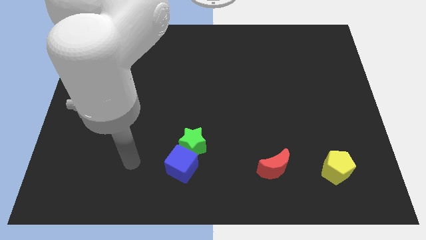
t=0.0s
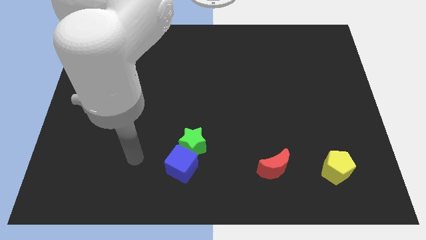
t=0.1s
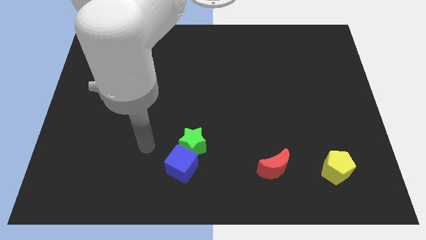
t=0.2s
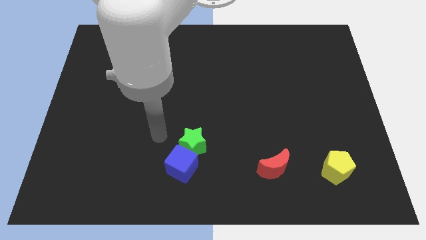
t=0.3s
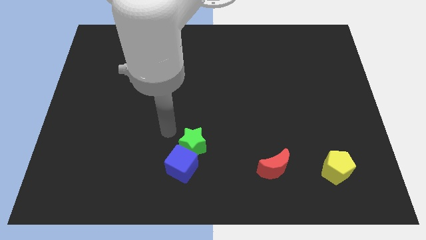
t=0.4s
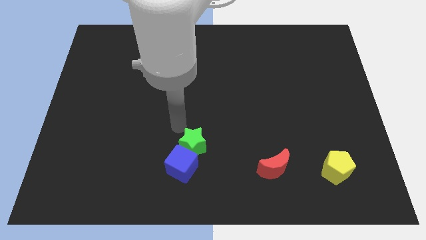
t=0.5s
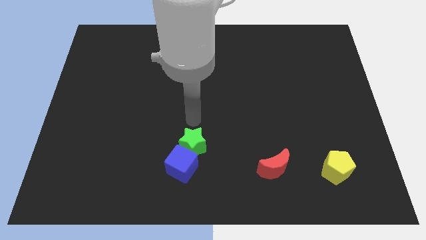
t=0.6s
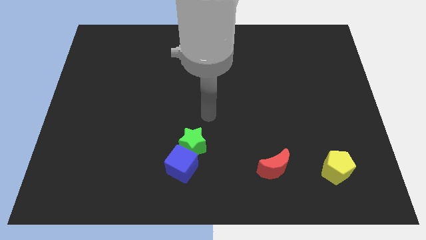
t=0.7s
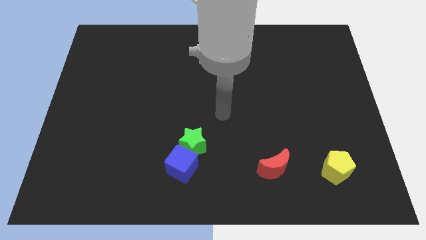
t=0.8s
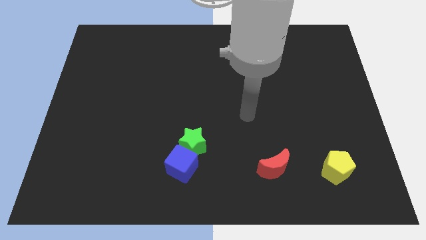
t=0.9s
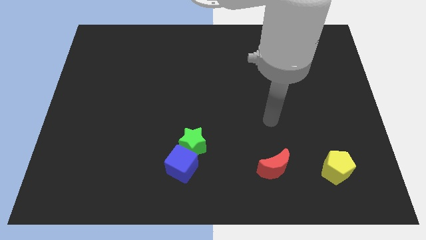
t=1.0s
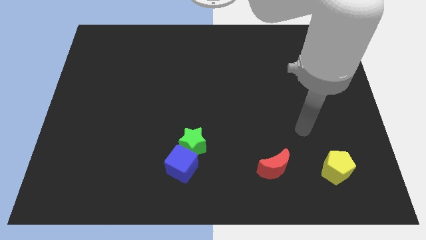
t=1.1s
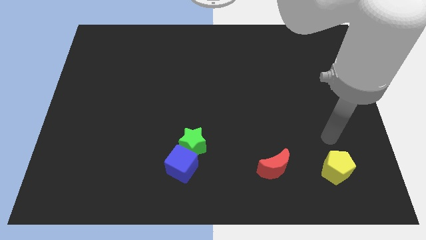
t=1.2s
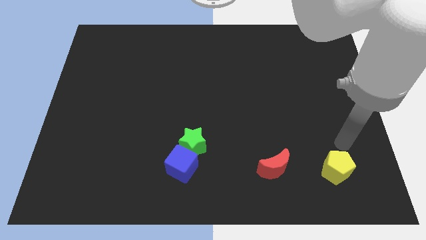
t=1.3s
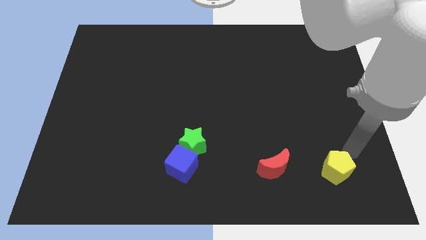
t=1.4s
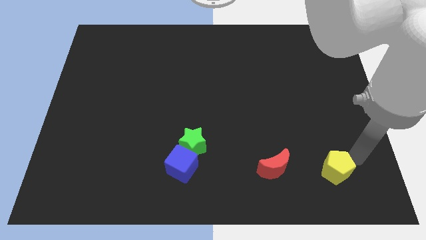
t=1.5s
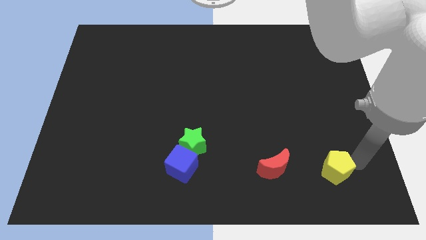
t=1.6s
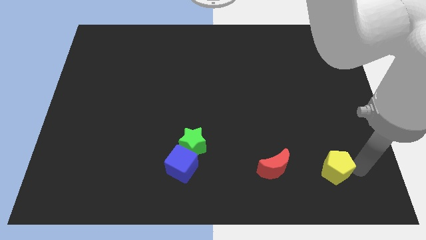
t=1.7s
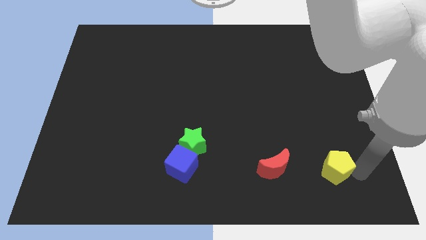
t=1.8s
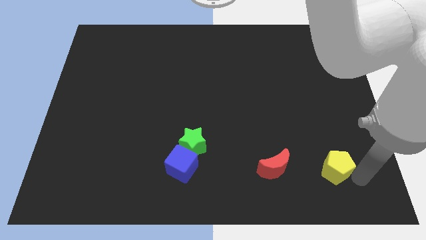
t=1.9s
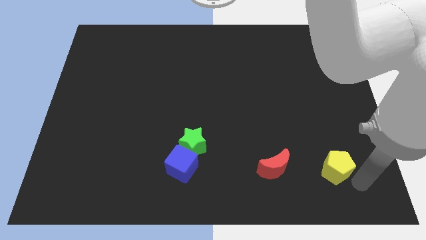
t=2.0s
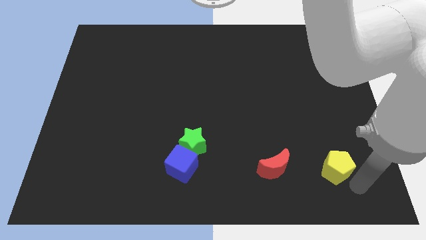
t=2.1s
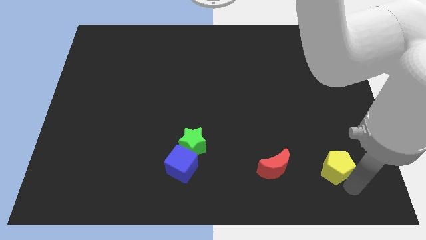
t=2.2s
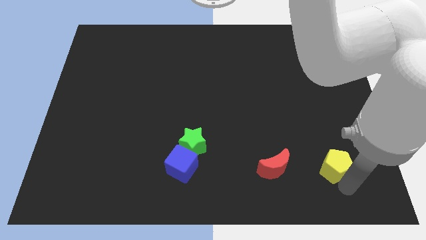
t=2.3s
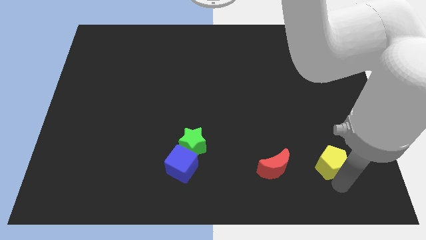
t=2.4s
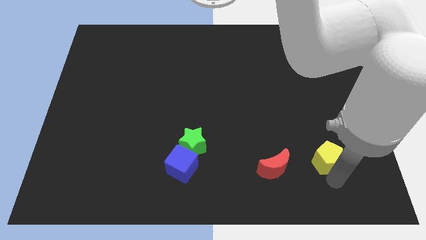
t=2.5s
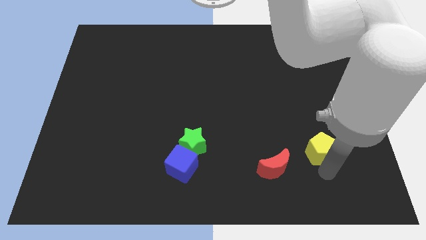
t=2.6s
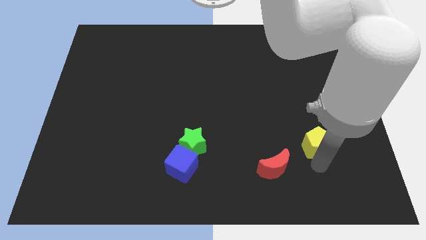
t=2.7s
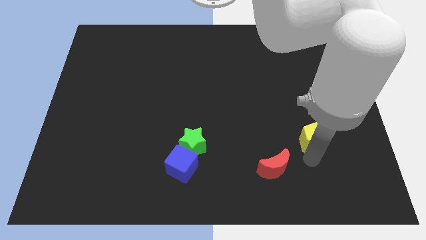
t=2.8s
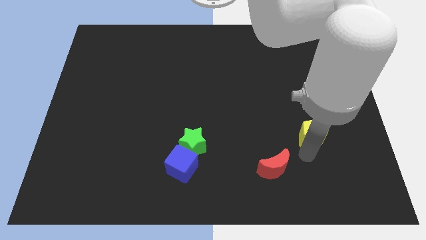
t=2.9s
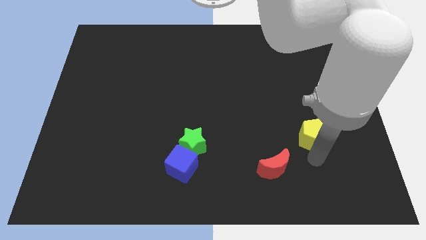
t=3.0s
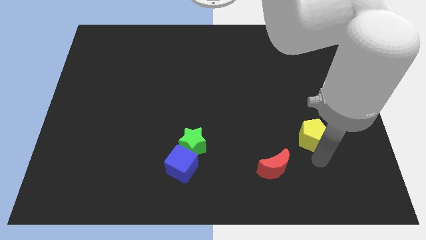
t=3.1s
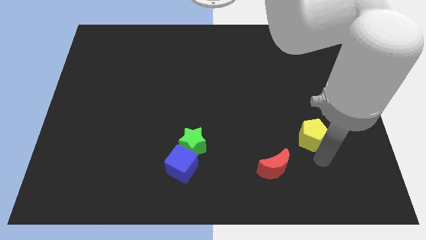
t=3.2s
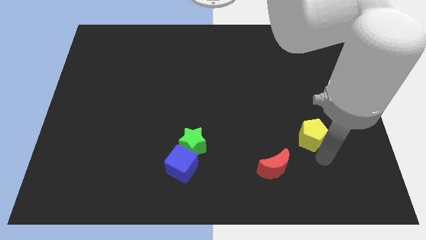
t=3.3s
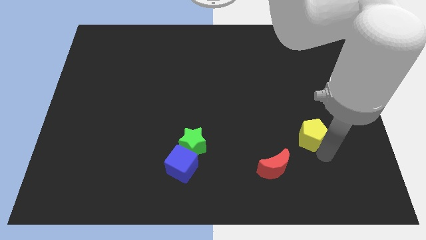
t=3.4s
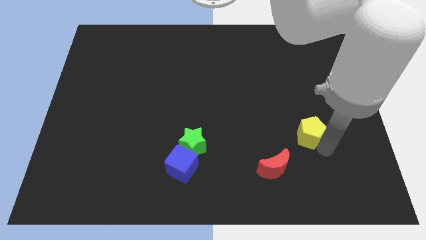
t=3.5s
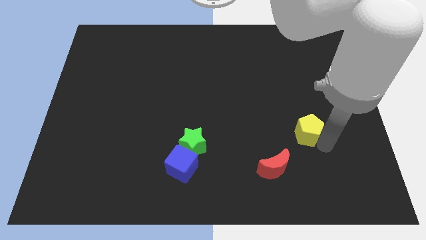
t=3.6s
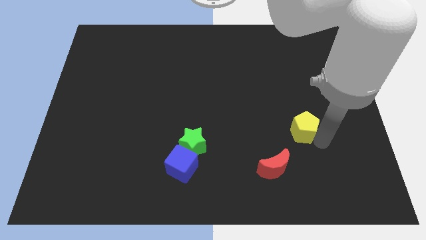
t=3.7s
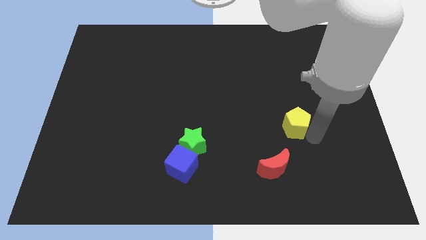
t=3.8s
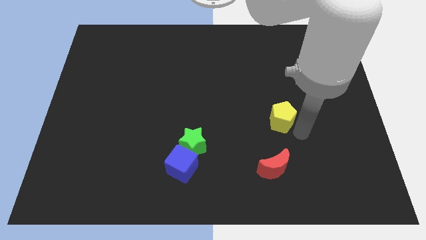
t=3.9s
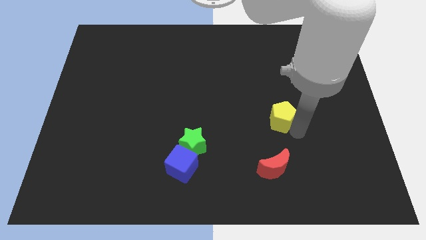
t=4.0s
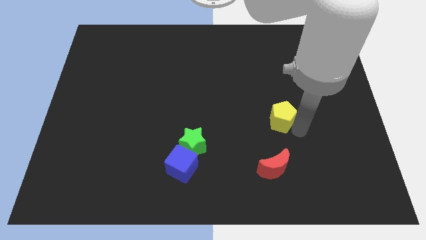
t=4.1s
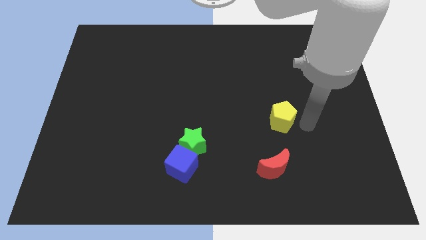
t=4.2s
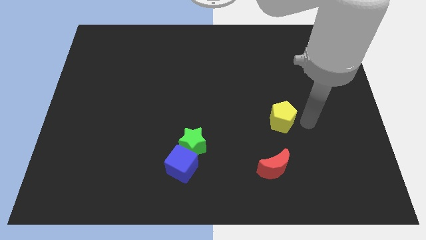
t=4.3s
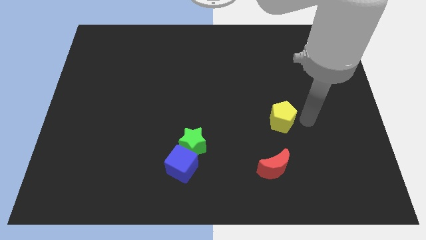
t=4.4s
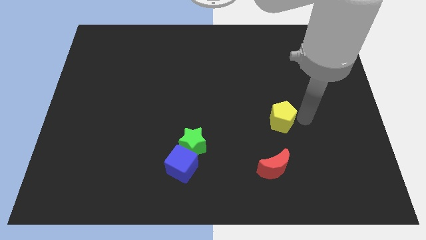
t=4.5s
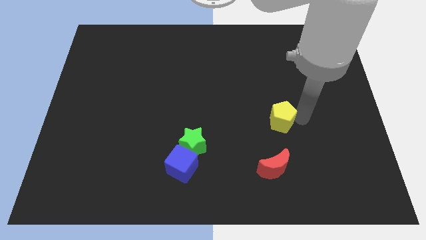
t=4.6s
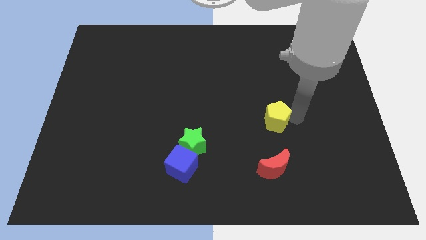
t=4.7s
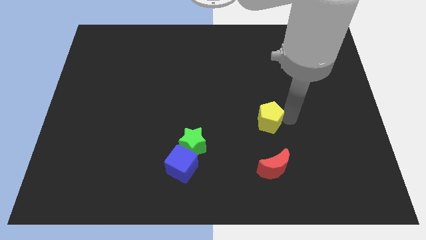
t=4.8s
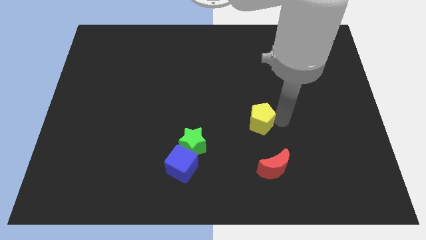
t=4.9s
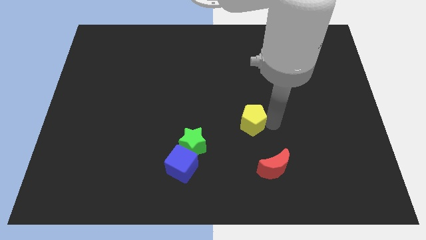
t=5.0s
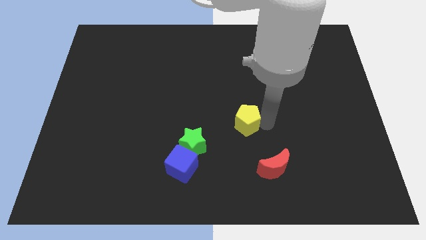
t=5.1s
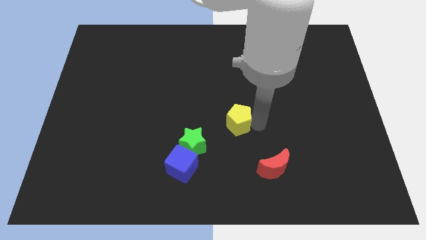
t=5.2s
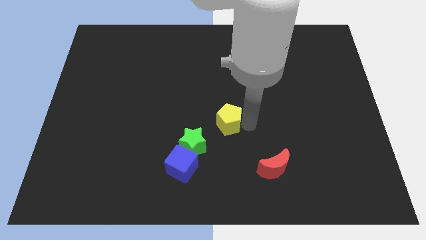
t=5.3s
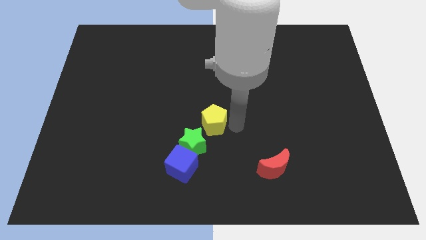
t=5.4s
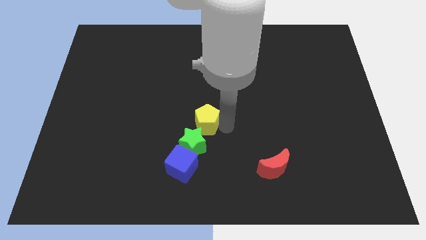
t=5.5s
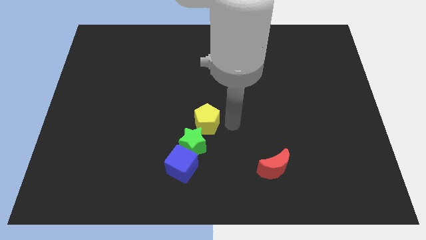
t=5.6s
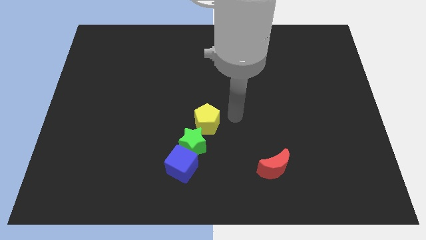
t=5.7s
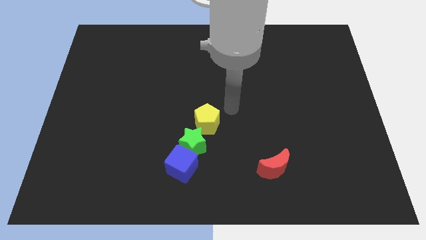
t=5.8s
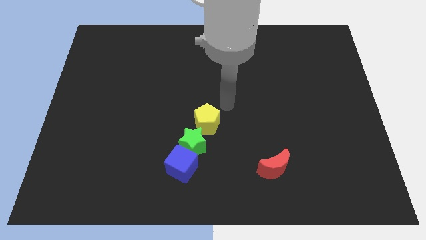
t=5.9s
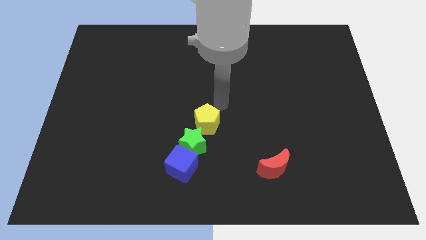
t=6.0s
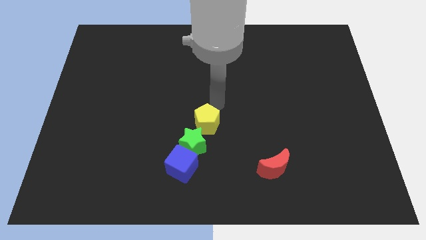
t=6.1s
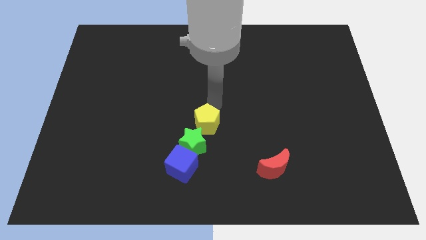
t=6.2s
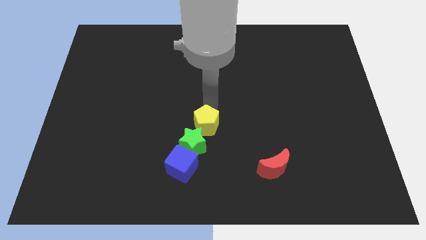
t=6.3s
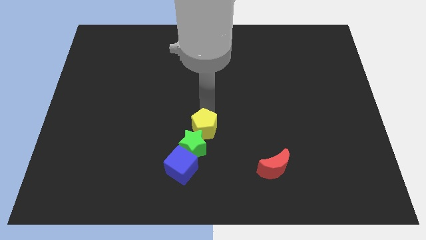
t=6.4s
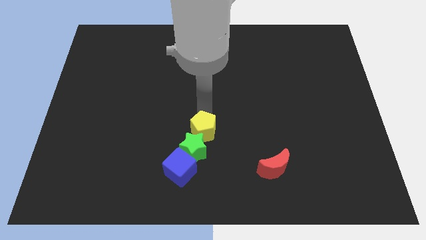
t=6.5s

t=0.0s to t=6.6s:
slide the yellow pentagon next to the green star

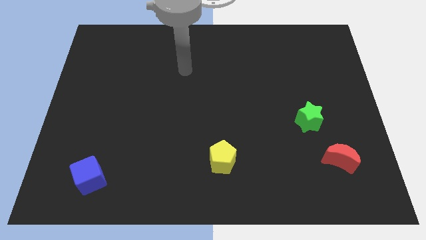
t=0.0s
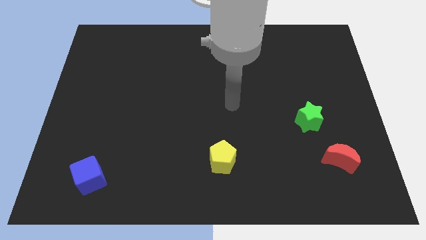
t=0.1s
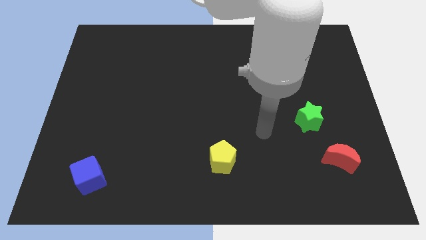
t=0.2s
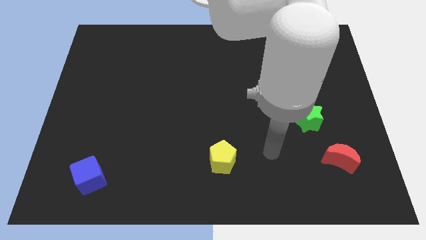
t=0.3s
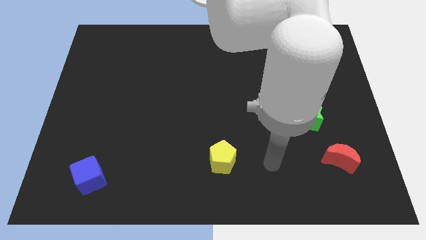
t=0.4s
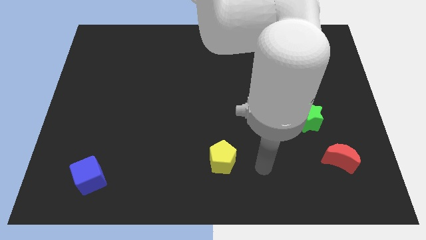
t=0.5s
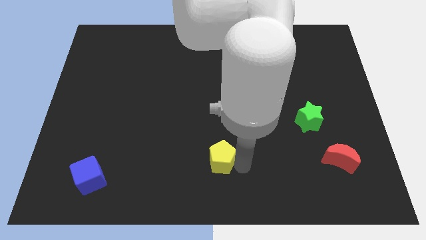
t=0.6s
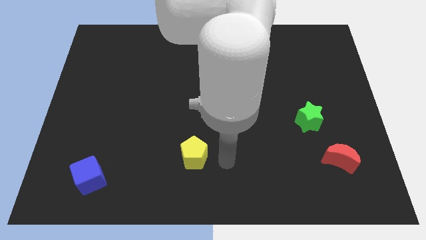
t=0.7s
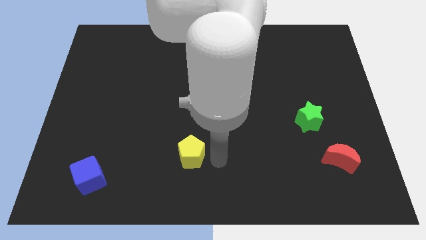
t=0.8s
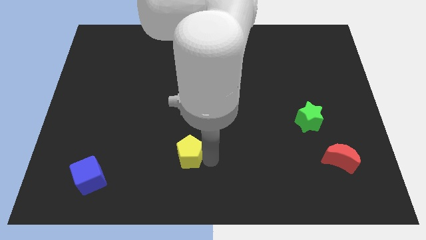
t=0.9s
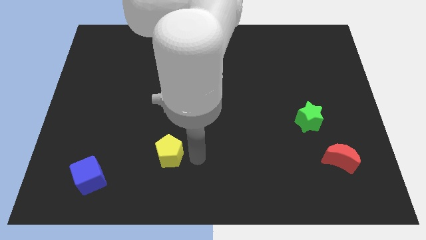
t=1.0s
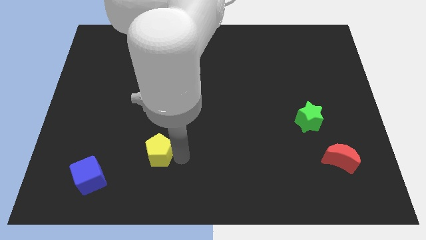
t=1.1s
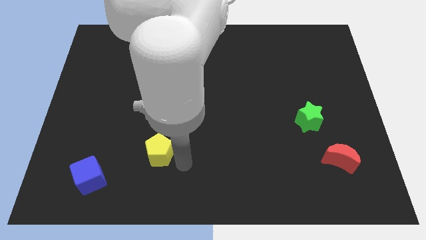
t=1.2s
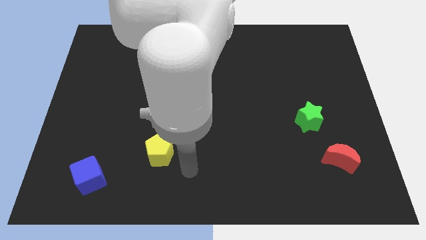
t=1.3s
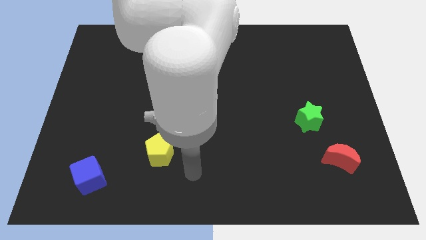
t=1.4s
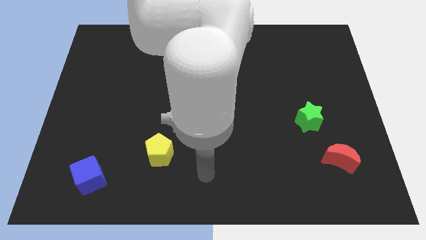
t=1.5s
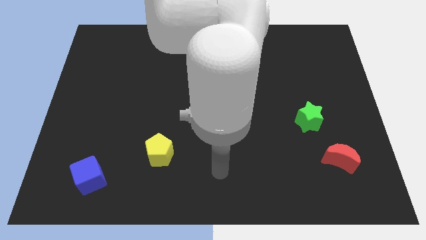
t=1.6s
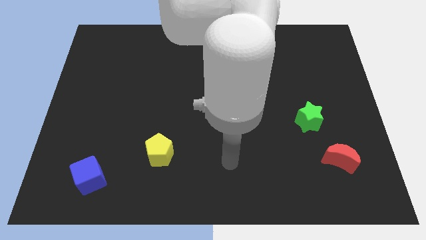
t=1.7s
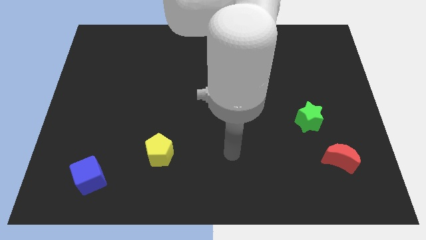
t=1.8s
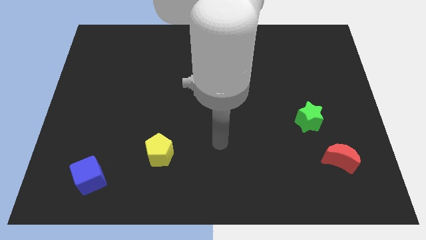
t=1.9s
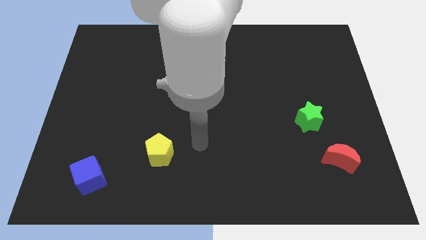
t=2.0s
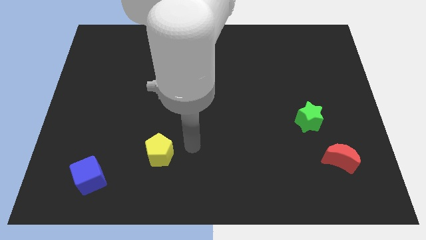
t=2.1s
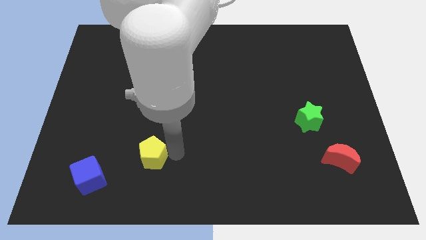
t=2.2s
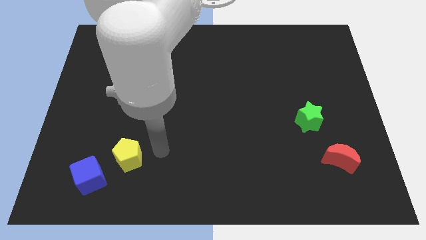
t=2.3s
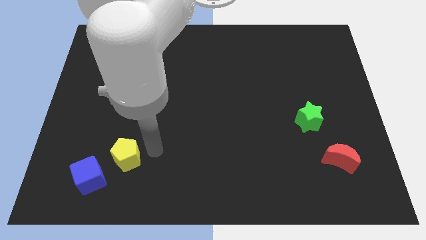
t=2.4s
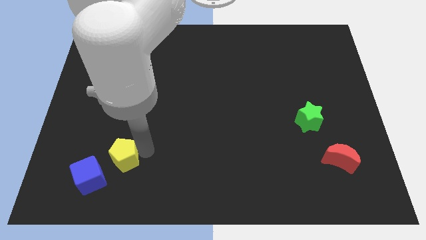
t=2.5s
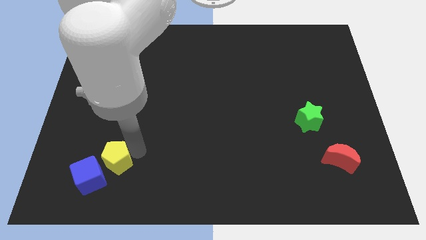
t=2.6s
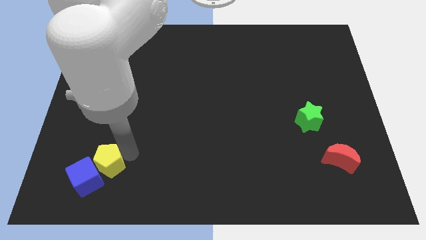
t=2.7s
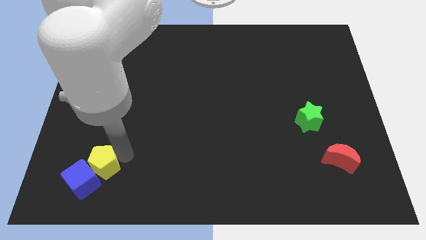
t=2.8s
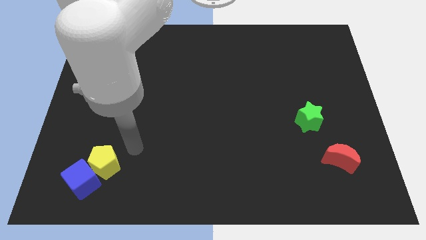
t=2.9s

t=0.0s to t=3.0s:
move the yellow pentagon close to the blue block
